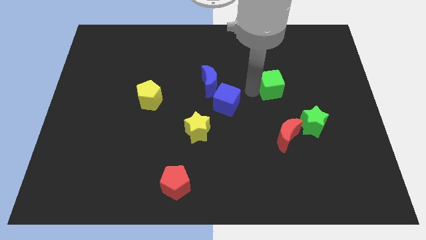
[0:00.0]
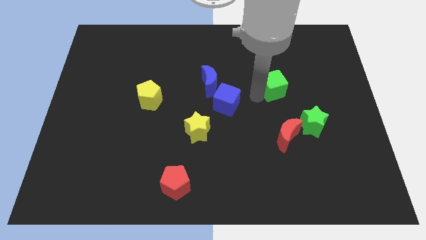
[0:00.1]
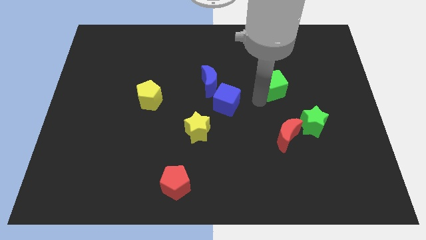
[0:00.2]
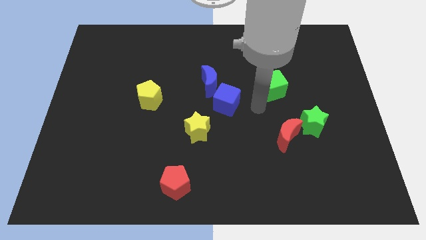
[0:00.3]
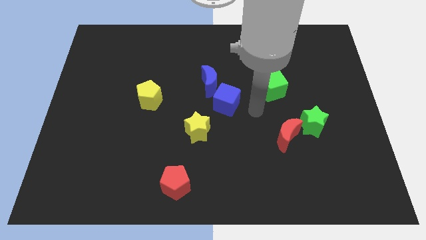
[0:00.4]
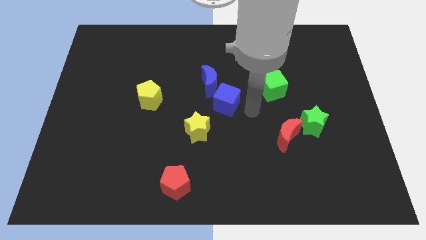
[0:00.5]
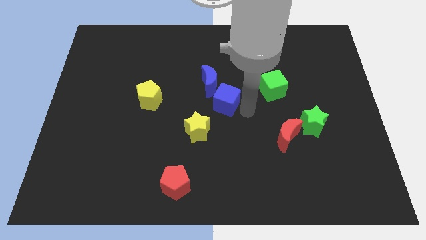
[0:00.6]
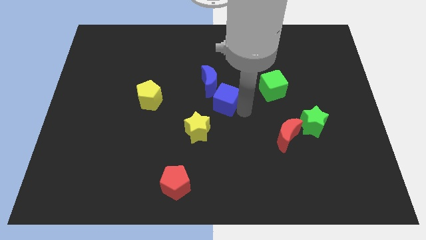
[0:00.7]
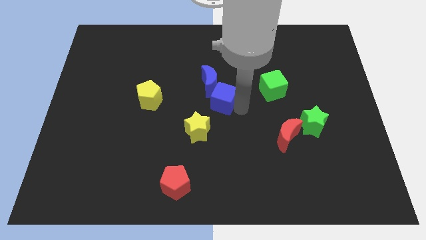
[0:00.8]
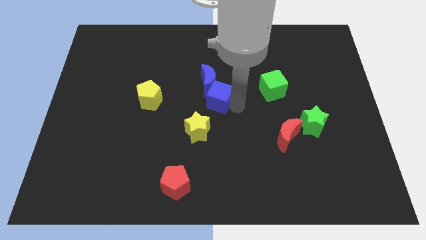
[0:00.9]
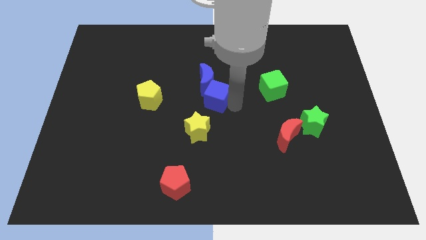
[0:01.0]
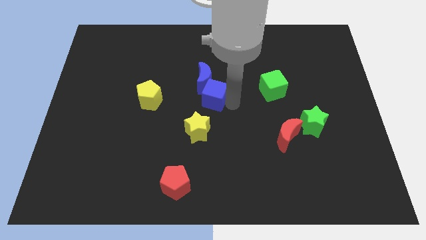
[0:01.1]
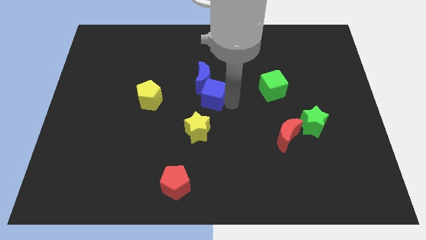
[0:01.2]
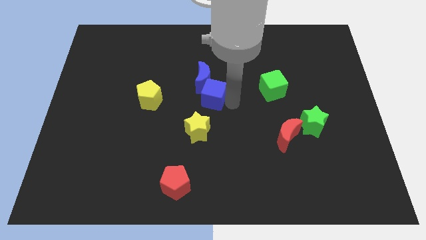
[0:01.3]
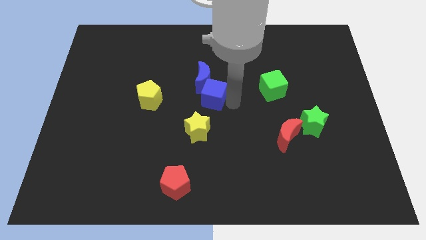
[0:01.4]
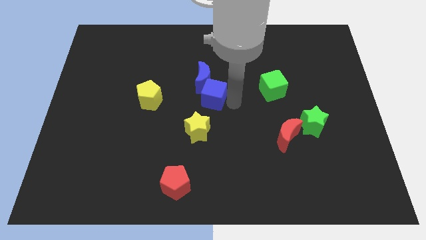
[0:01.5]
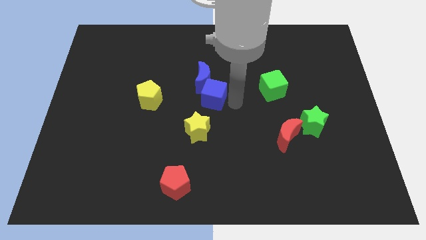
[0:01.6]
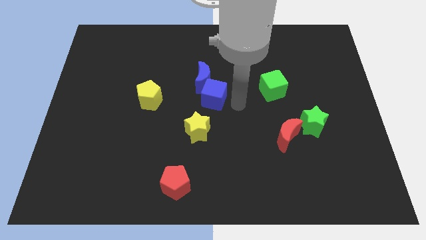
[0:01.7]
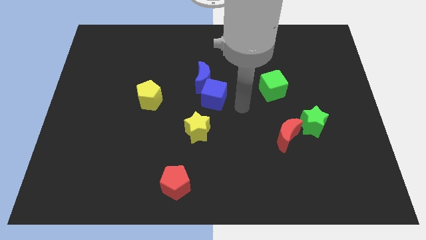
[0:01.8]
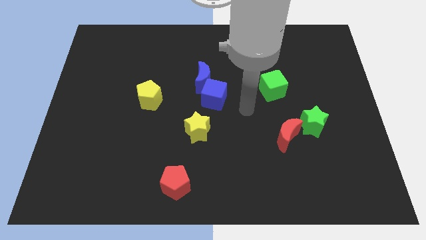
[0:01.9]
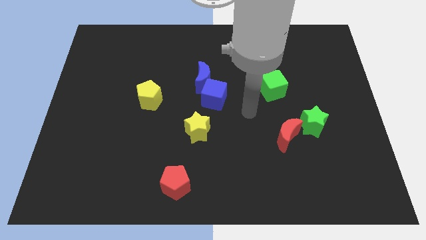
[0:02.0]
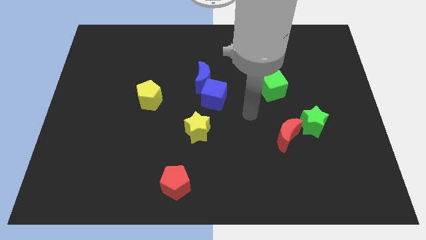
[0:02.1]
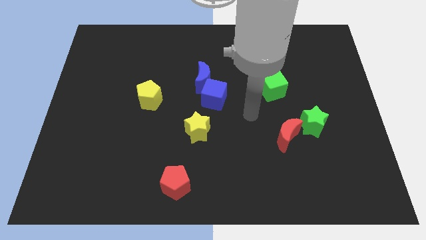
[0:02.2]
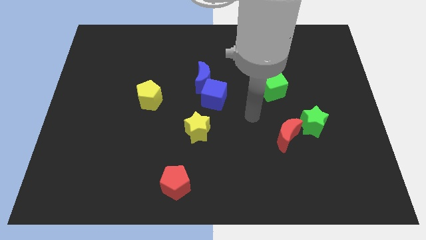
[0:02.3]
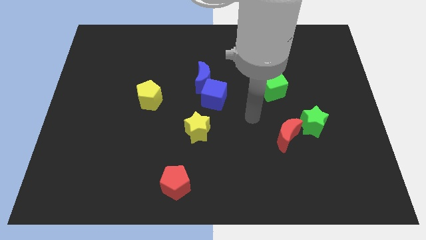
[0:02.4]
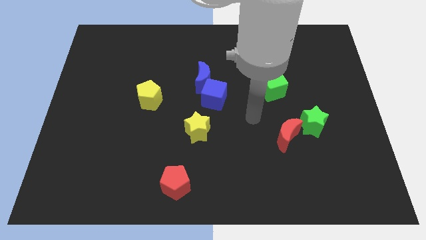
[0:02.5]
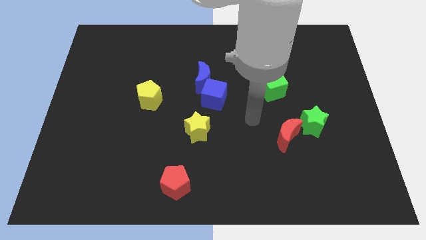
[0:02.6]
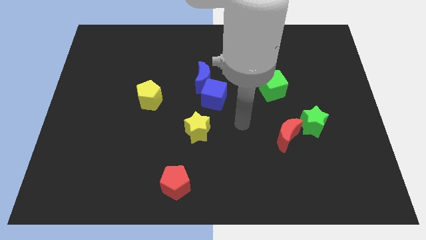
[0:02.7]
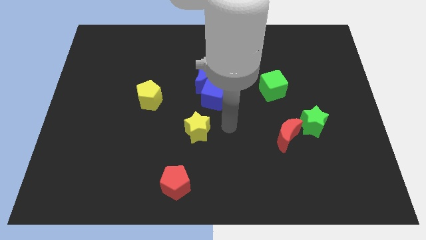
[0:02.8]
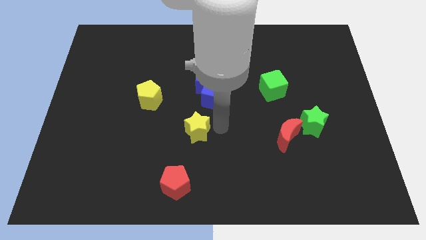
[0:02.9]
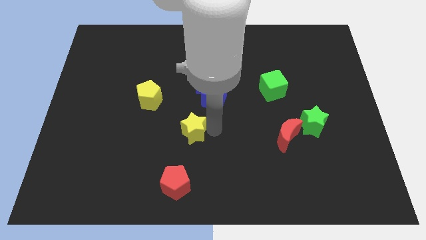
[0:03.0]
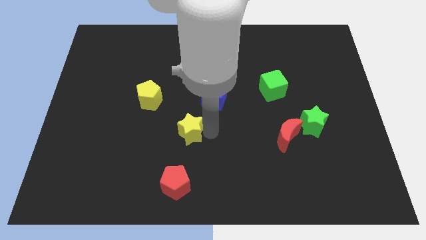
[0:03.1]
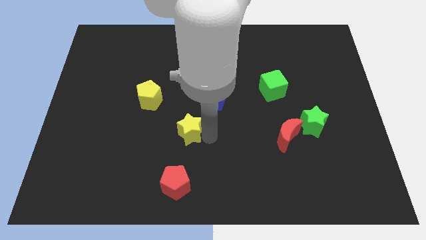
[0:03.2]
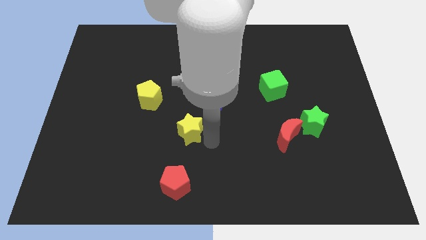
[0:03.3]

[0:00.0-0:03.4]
adjust the yellow star and blue cube diagonally on the top right side of the red pentagon

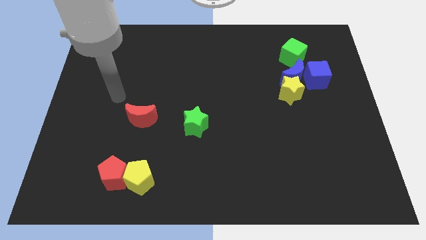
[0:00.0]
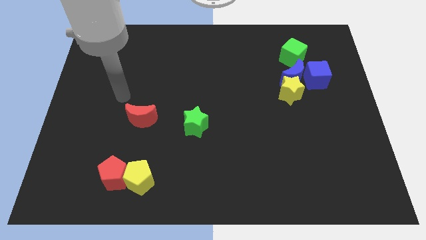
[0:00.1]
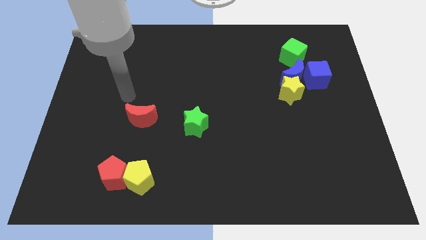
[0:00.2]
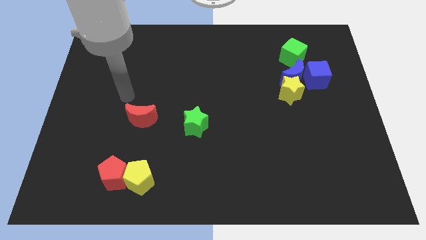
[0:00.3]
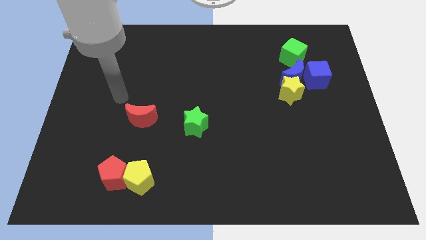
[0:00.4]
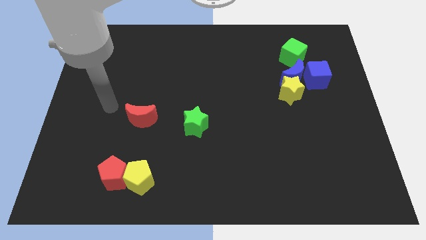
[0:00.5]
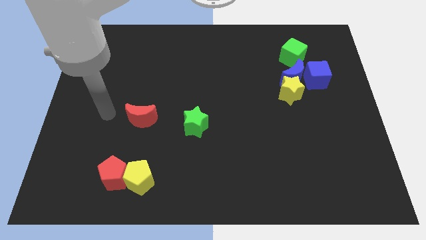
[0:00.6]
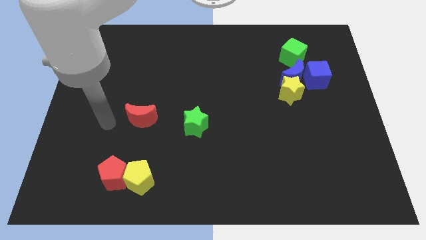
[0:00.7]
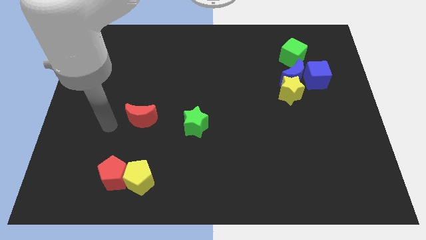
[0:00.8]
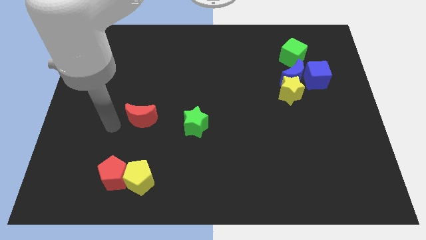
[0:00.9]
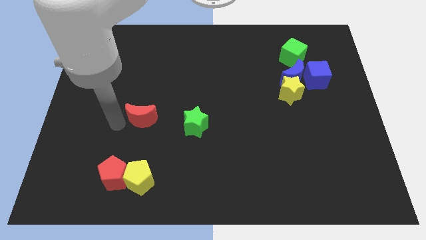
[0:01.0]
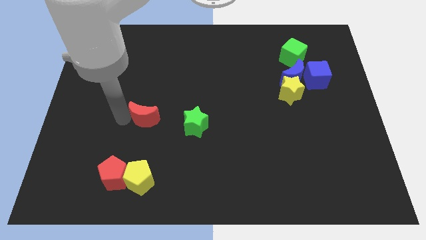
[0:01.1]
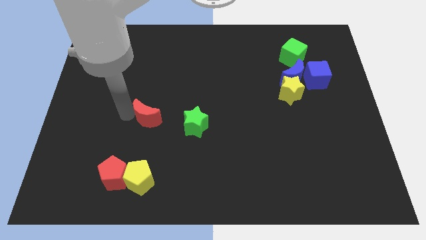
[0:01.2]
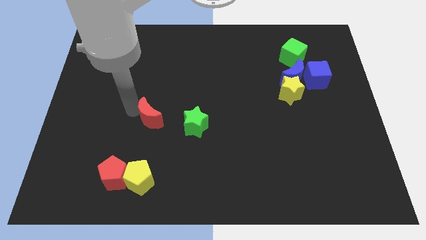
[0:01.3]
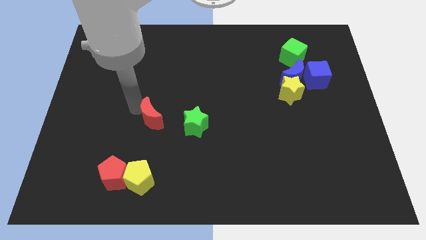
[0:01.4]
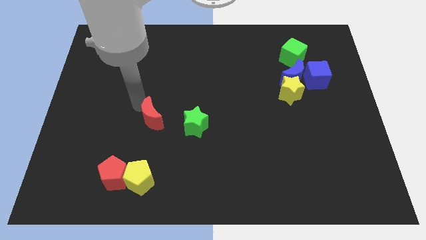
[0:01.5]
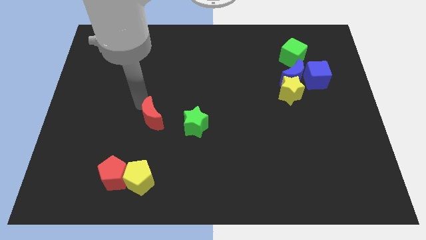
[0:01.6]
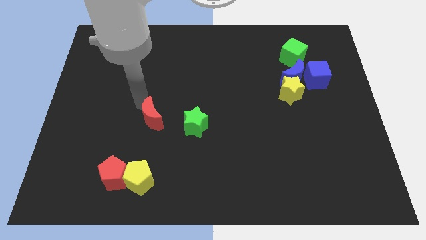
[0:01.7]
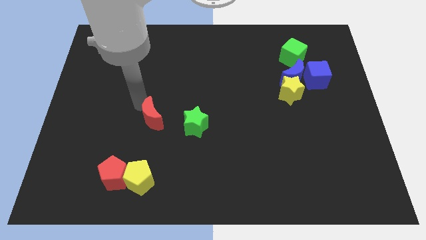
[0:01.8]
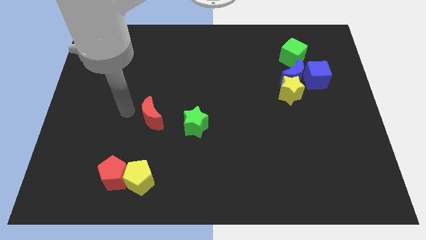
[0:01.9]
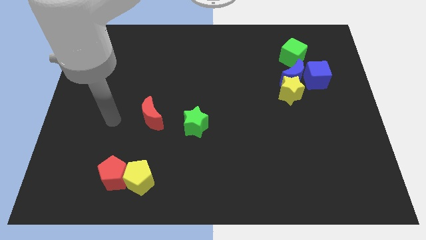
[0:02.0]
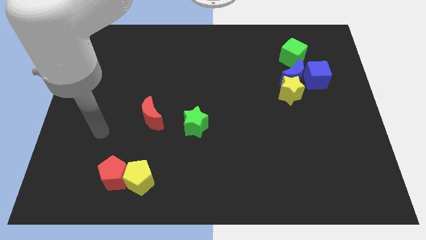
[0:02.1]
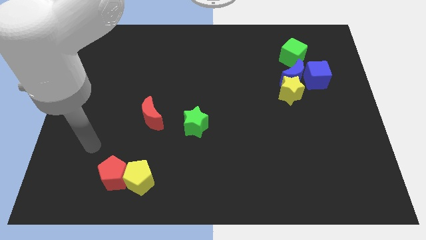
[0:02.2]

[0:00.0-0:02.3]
move arm near red pentagon

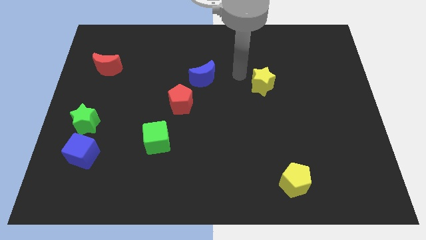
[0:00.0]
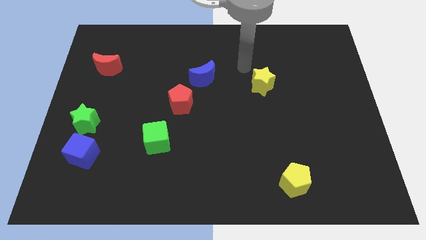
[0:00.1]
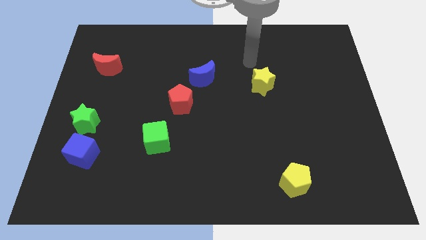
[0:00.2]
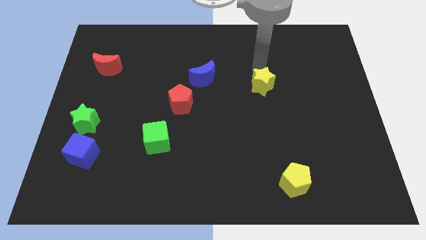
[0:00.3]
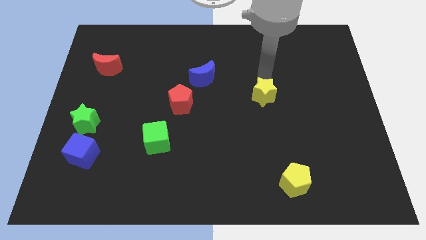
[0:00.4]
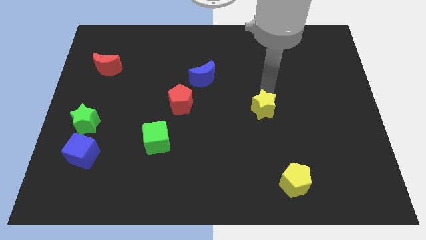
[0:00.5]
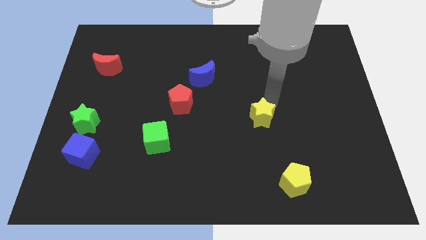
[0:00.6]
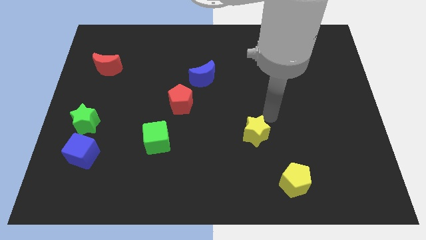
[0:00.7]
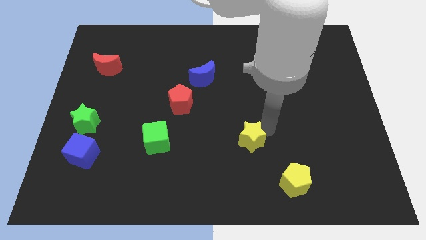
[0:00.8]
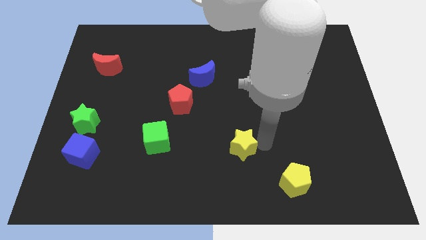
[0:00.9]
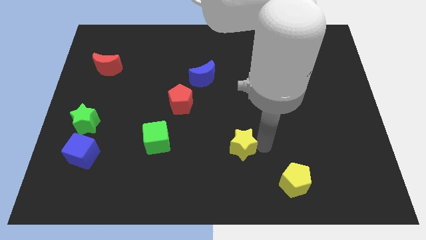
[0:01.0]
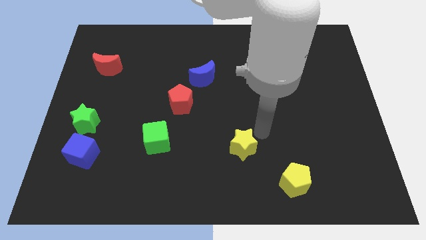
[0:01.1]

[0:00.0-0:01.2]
place yellow star to the right of the green cube

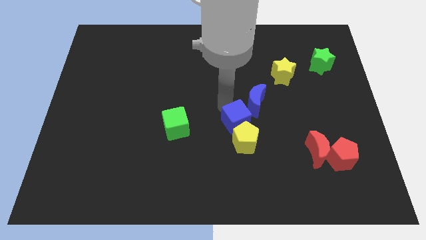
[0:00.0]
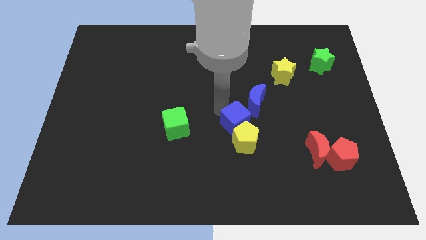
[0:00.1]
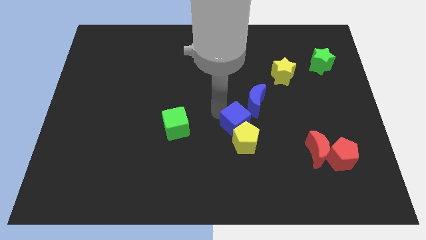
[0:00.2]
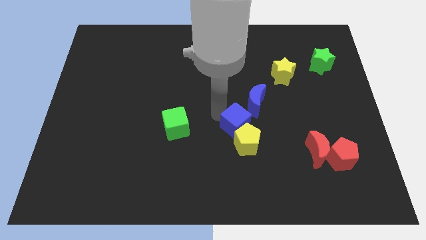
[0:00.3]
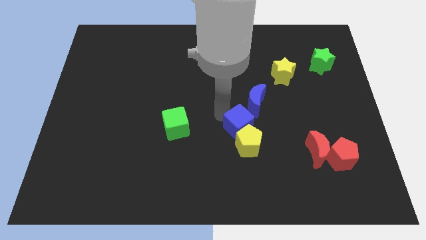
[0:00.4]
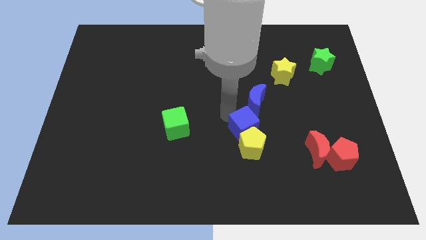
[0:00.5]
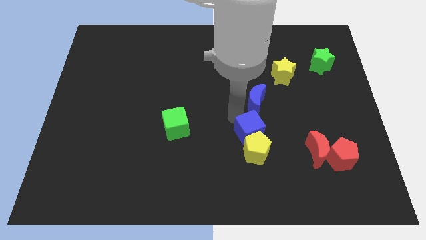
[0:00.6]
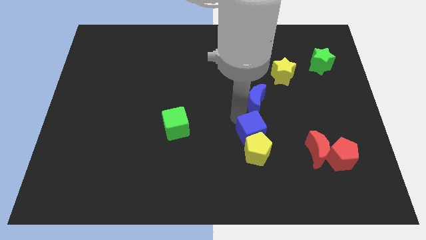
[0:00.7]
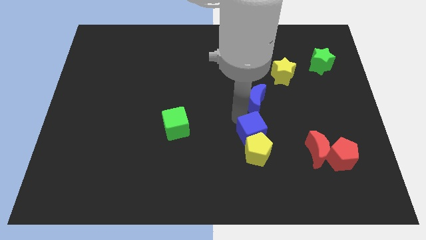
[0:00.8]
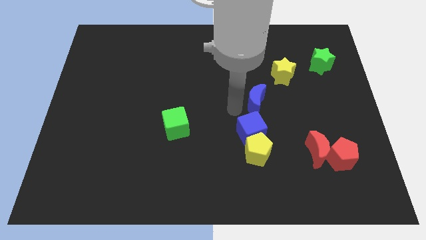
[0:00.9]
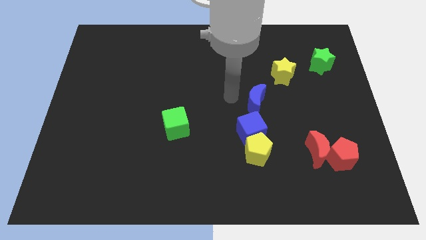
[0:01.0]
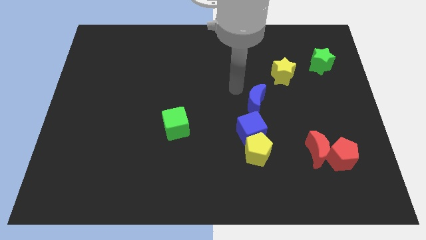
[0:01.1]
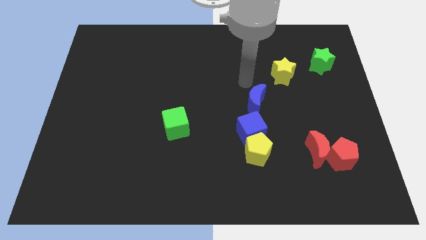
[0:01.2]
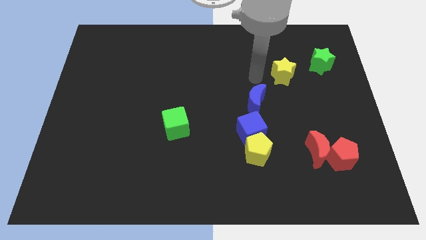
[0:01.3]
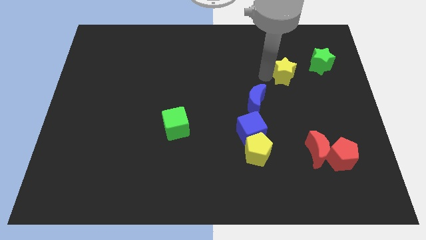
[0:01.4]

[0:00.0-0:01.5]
push the blue cube into the yellow pentagon

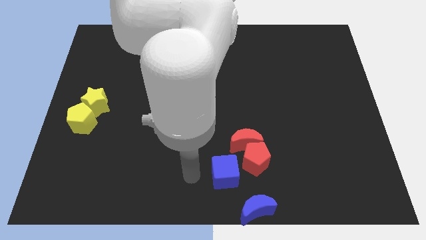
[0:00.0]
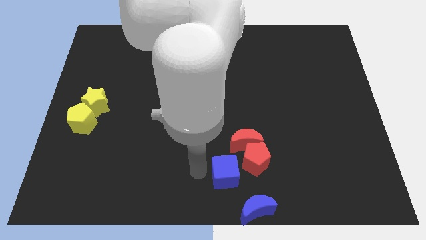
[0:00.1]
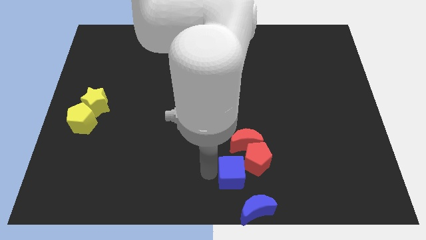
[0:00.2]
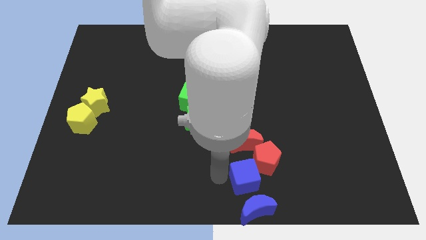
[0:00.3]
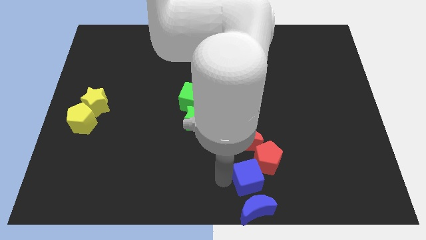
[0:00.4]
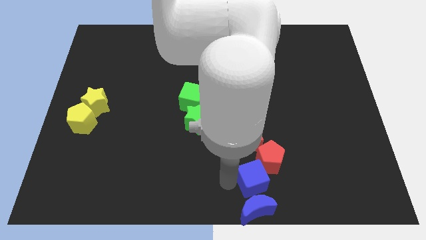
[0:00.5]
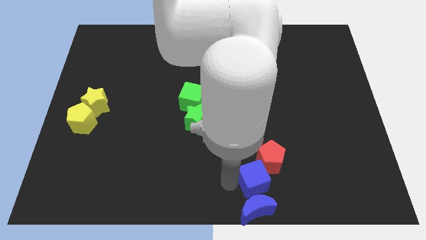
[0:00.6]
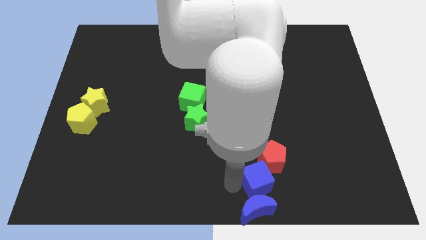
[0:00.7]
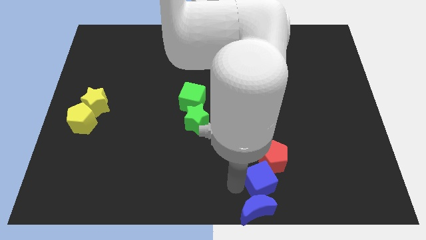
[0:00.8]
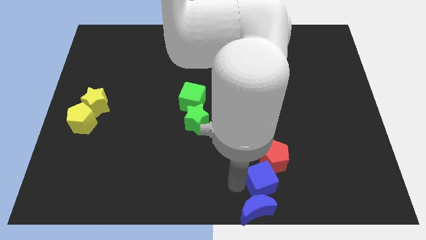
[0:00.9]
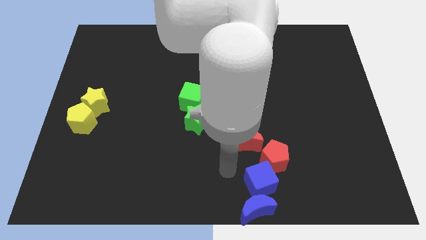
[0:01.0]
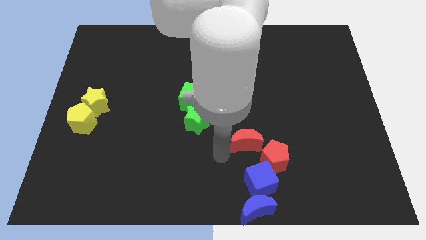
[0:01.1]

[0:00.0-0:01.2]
move blue cube on top of blue moon
